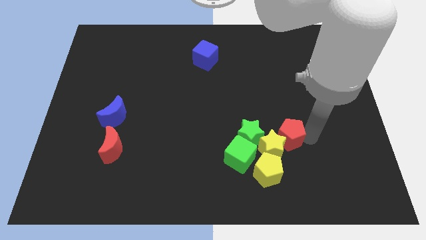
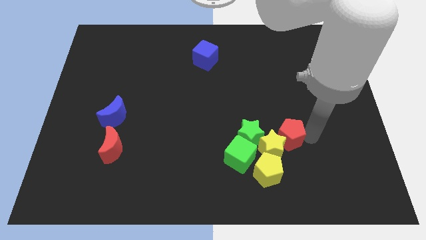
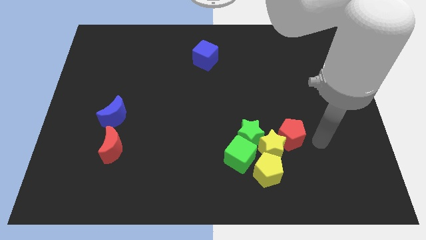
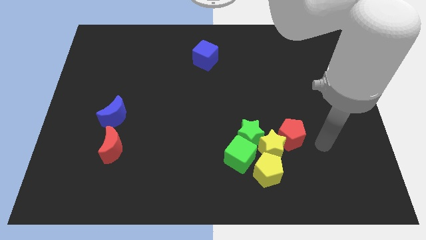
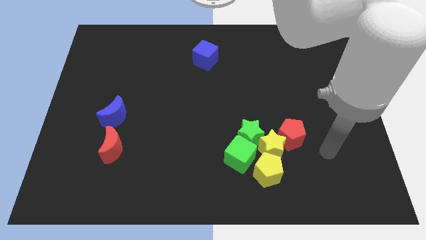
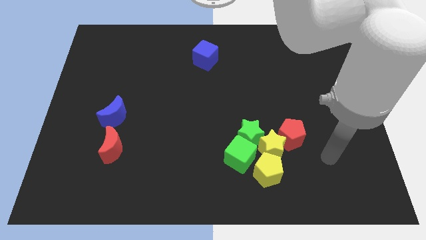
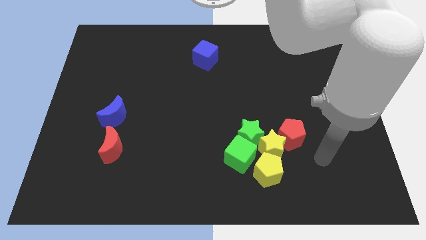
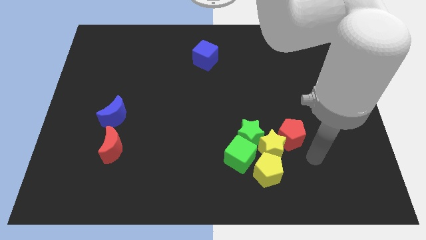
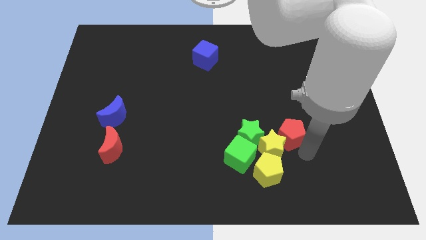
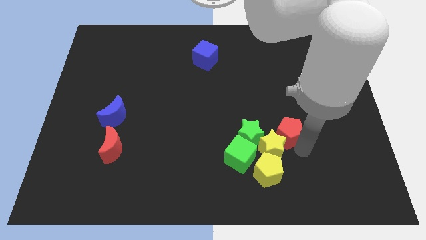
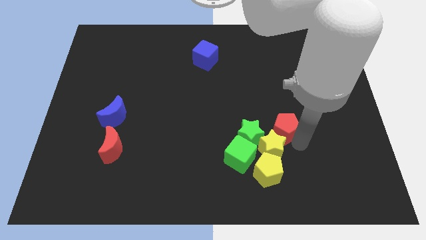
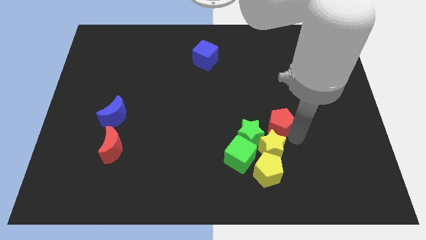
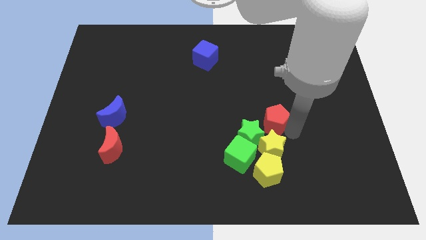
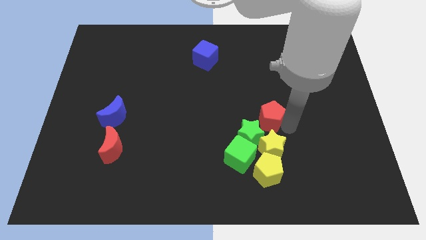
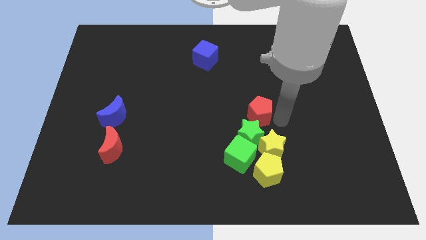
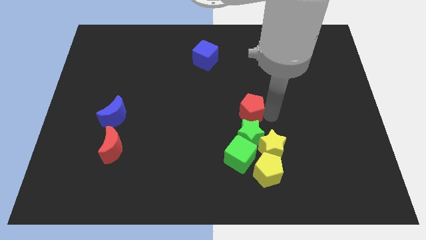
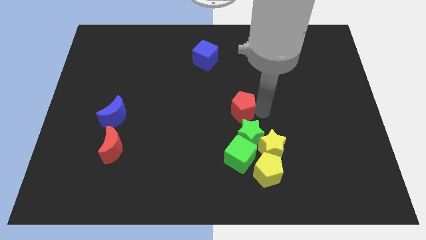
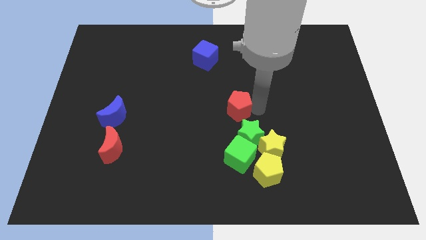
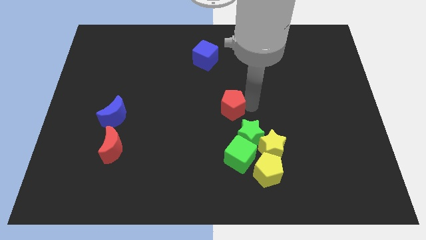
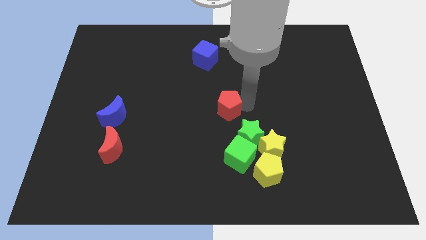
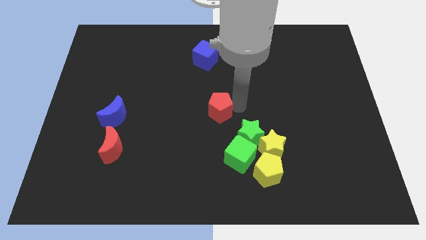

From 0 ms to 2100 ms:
separate red pentagon from yellow star

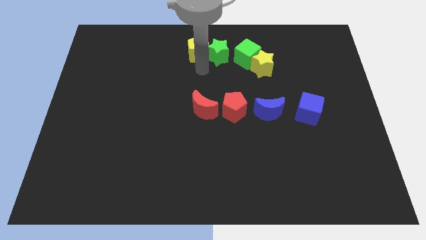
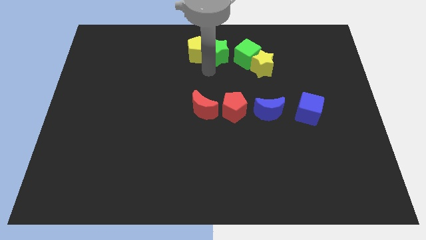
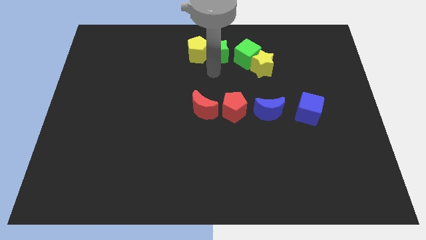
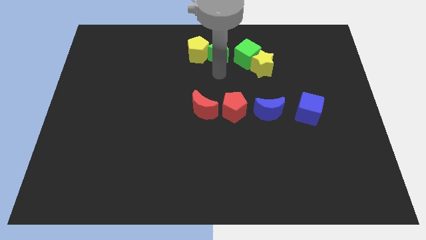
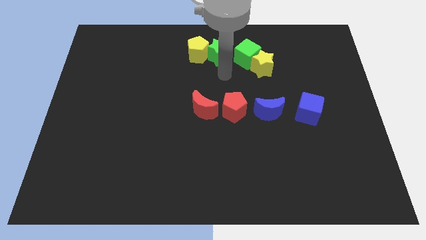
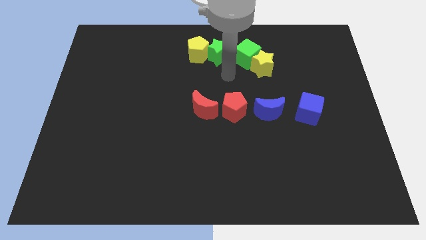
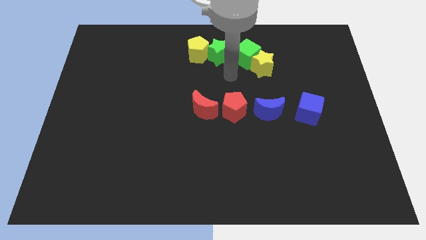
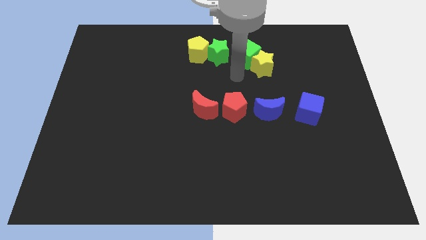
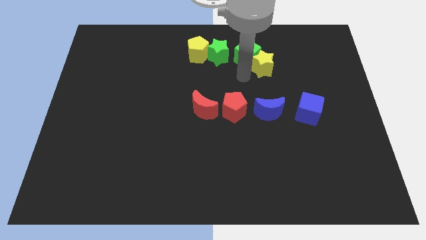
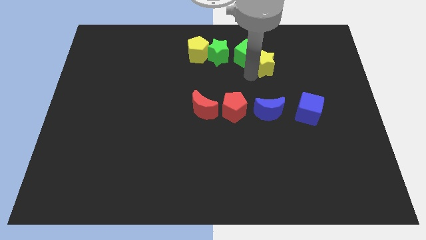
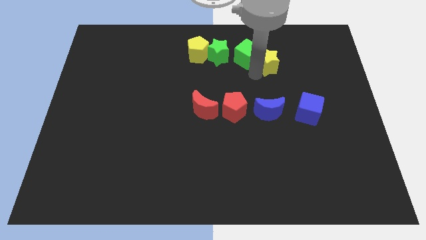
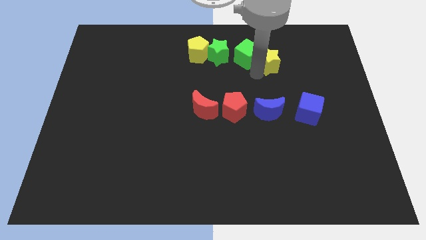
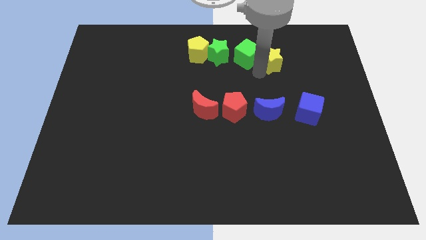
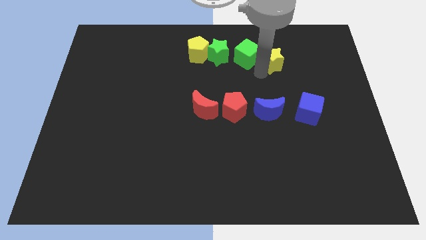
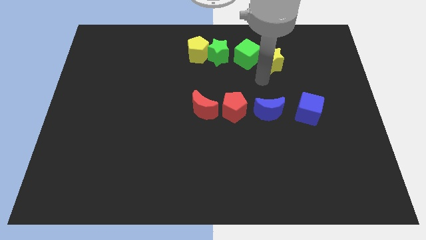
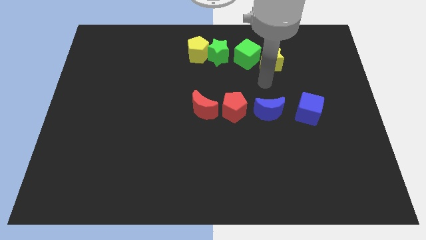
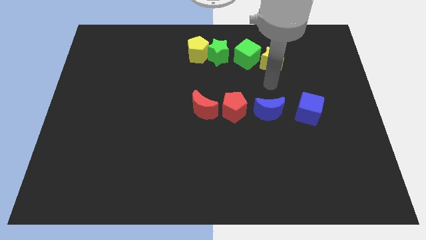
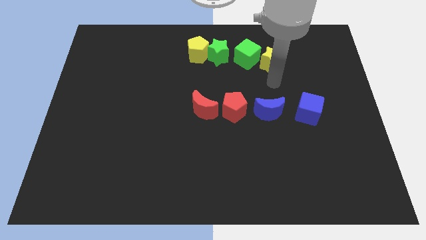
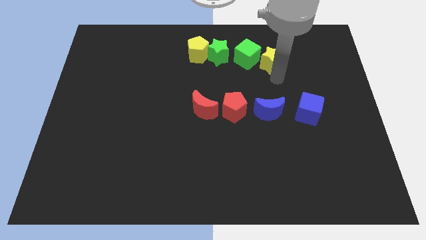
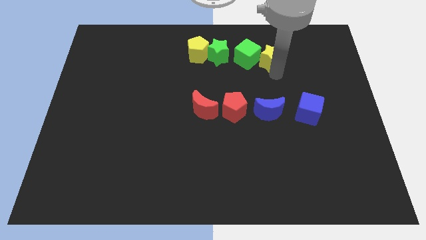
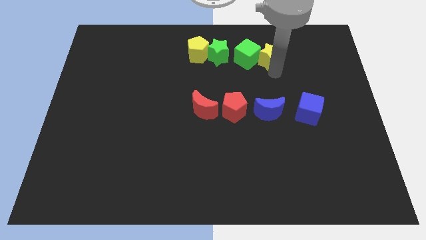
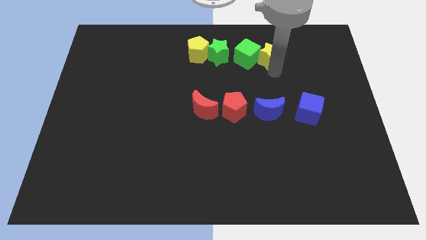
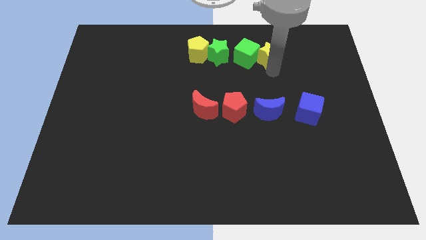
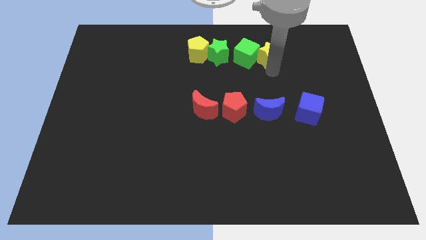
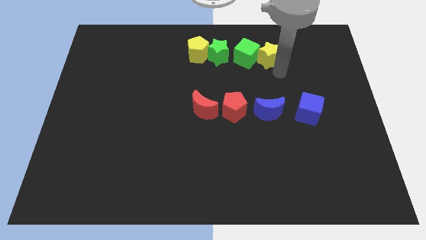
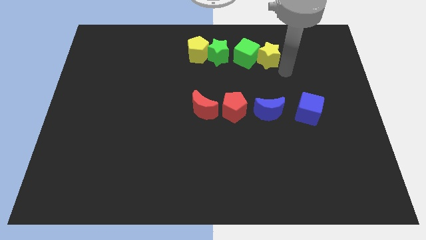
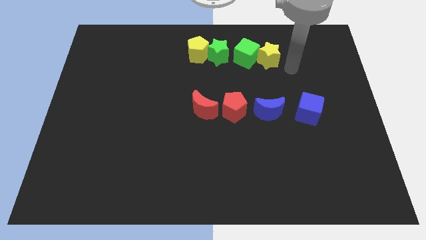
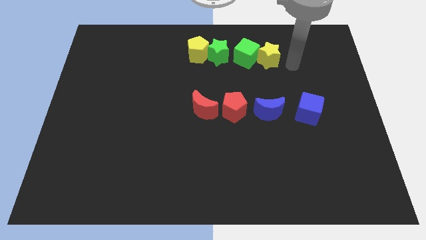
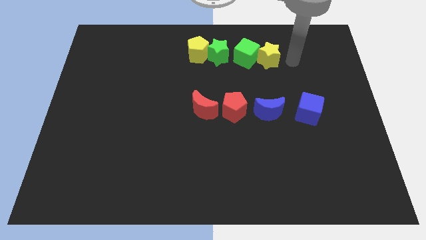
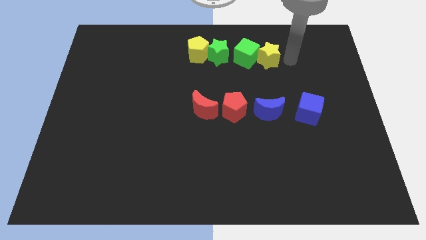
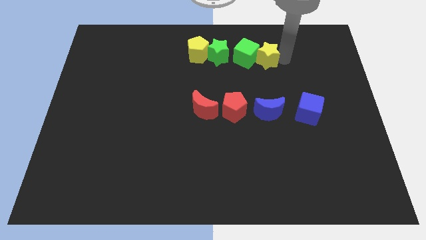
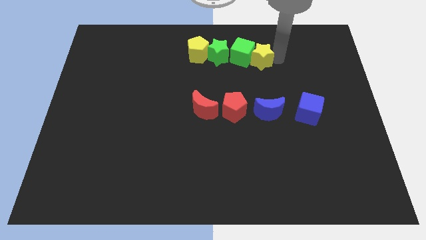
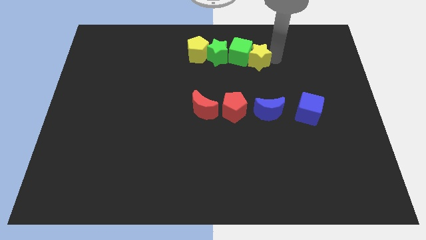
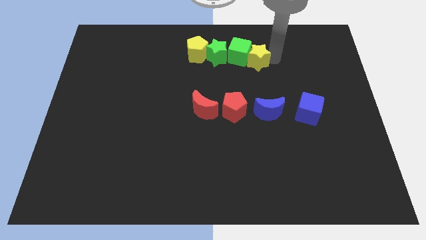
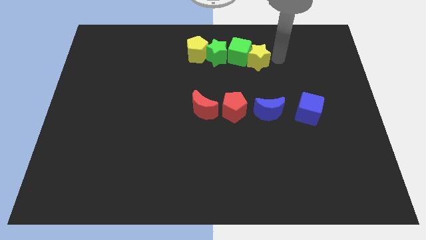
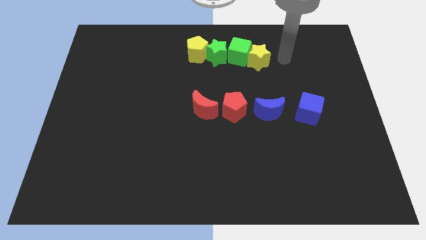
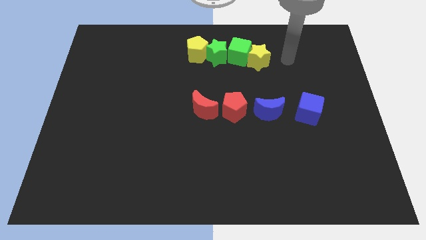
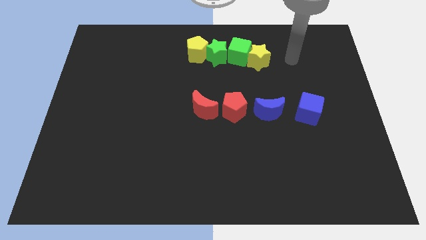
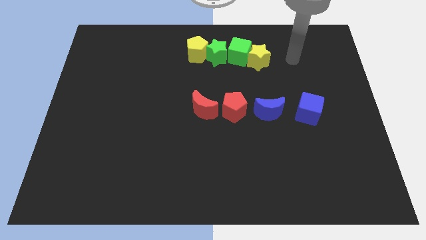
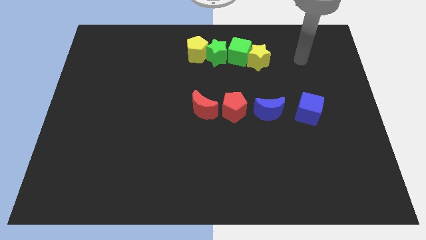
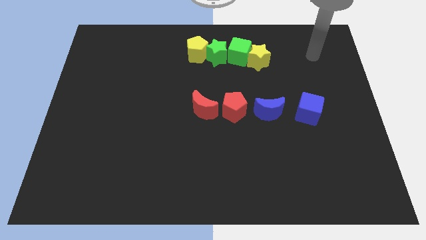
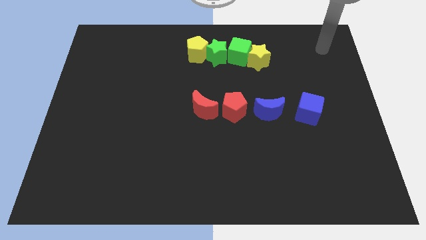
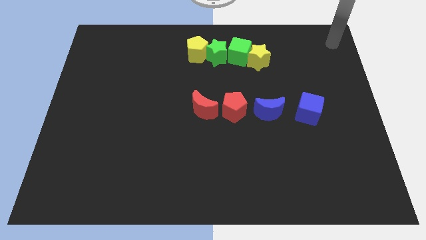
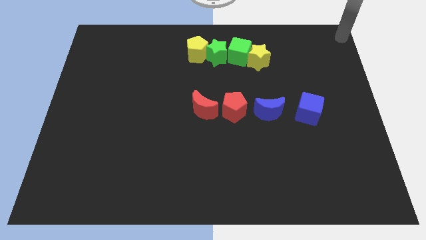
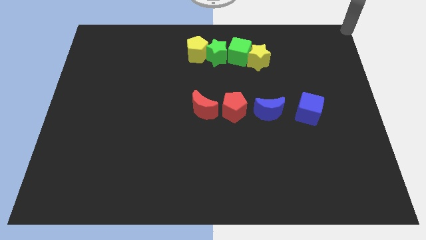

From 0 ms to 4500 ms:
place the yellow star on the right side of the green cube

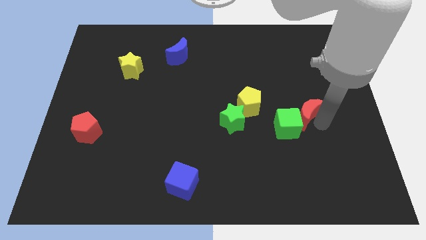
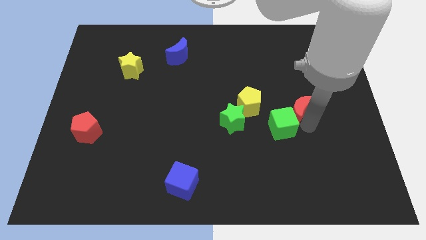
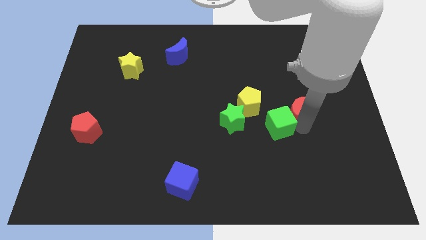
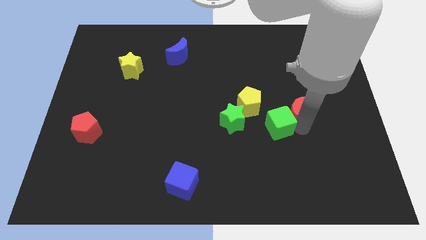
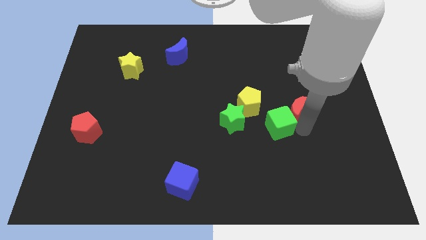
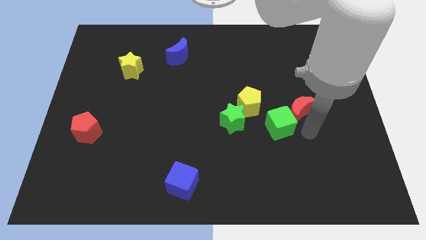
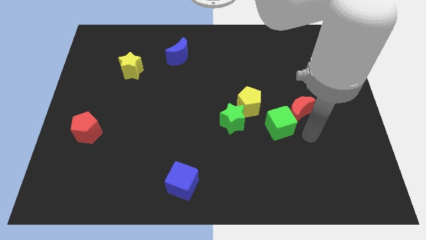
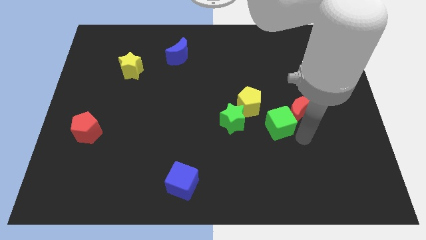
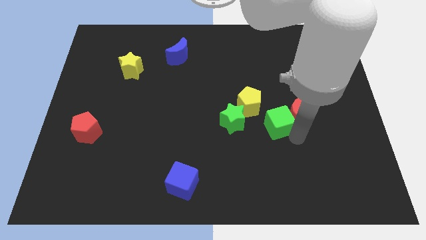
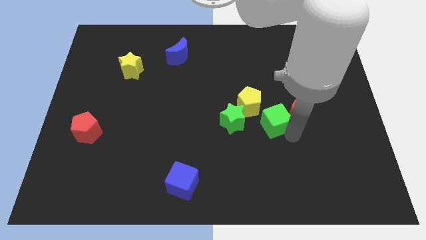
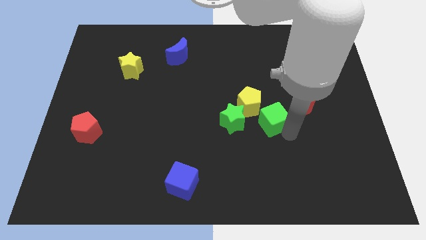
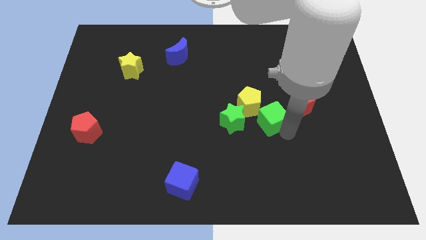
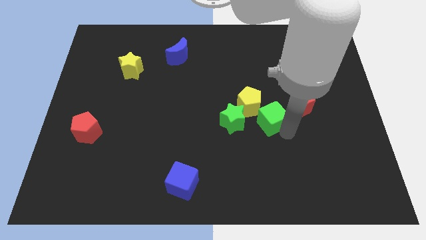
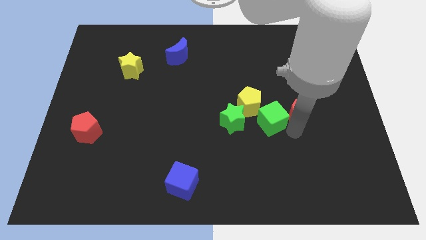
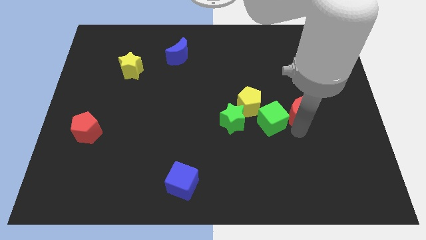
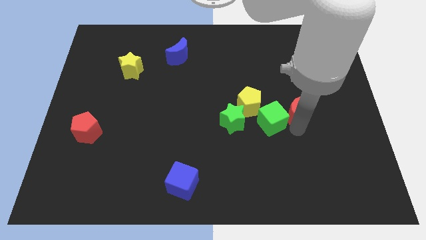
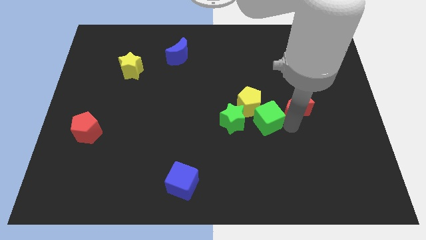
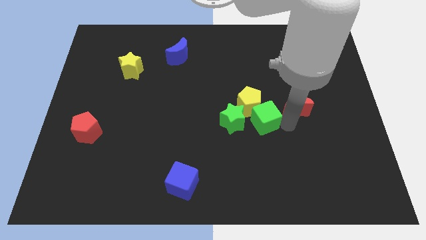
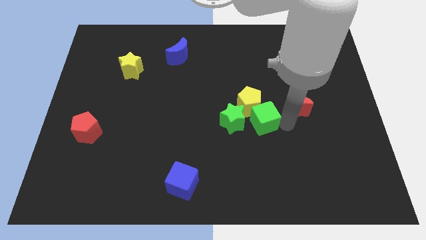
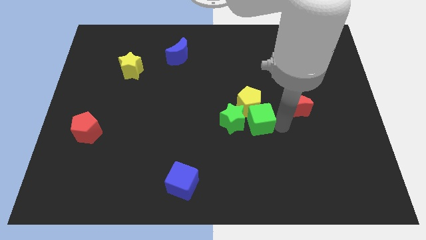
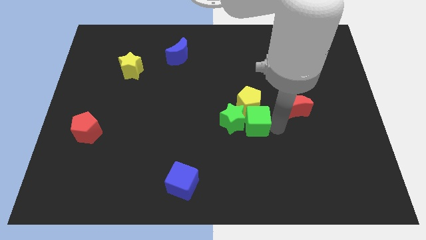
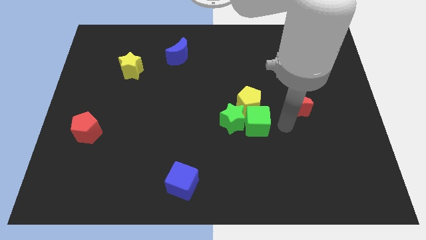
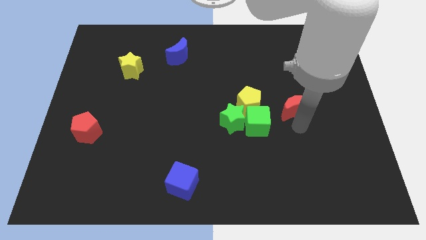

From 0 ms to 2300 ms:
move the green cube to the right of the green star
